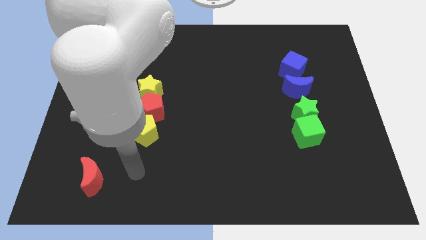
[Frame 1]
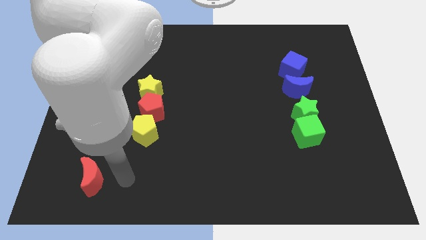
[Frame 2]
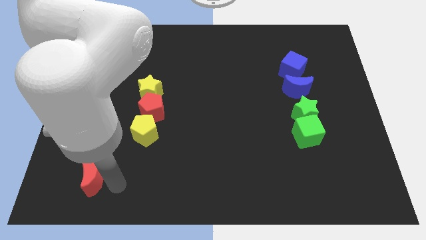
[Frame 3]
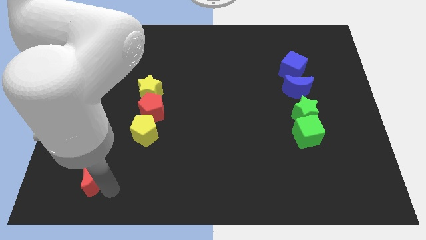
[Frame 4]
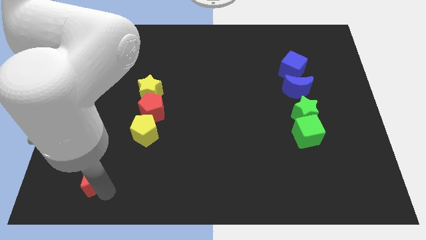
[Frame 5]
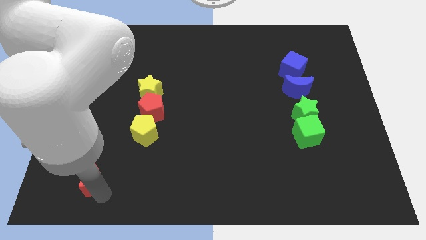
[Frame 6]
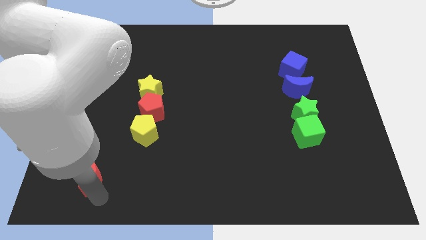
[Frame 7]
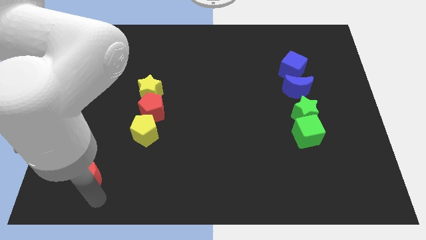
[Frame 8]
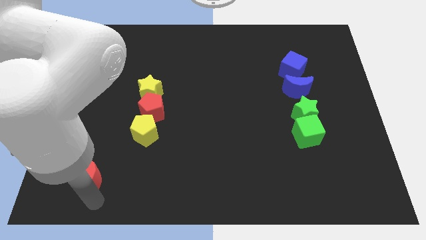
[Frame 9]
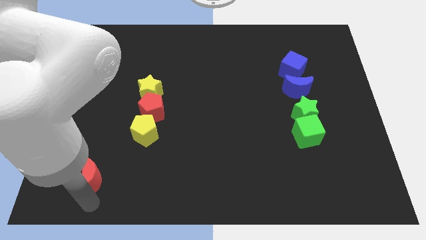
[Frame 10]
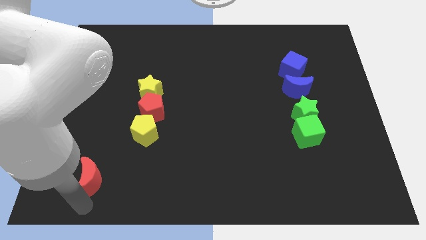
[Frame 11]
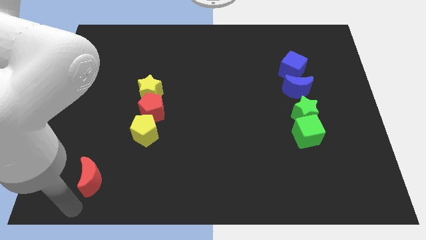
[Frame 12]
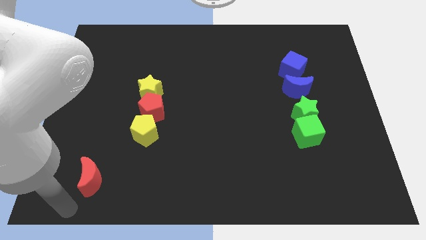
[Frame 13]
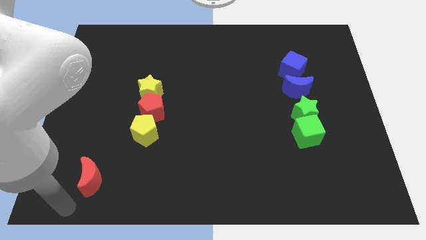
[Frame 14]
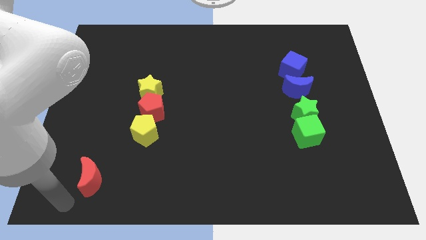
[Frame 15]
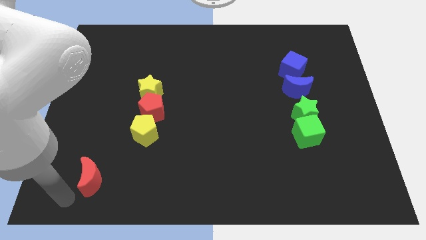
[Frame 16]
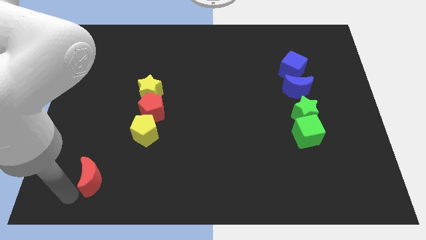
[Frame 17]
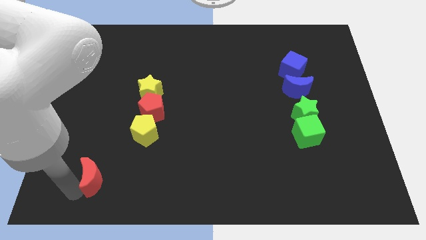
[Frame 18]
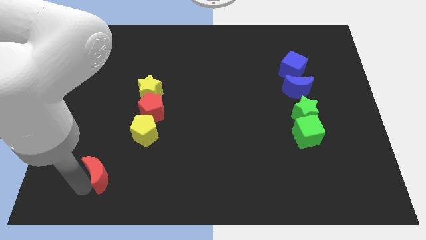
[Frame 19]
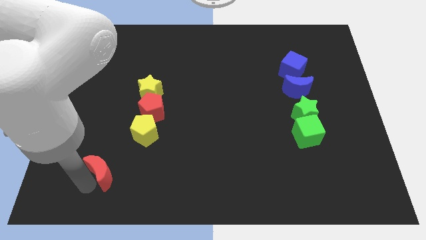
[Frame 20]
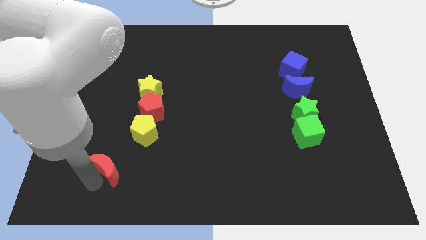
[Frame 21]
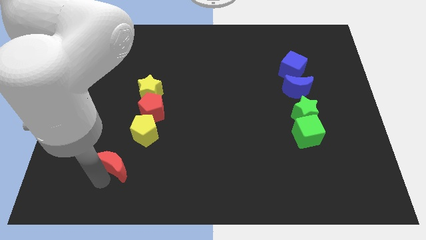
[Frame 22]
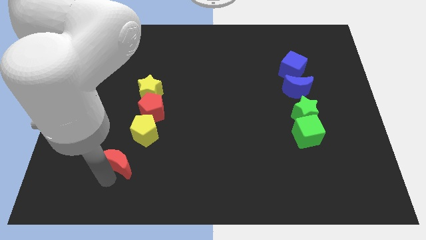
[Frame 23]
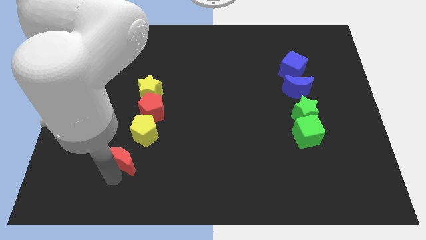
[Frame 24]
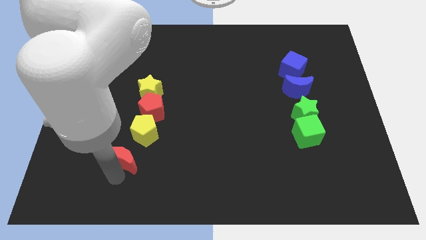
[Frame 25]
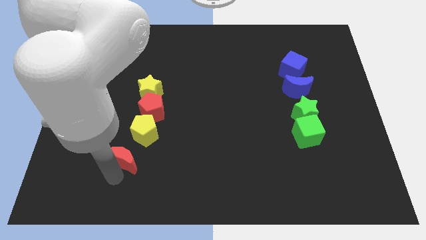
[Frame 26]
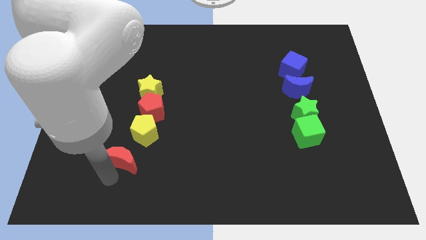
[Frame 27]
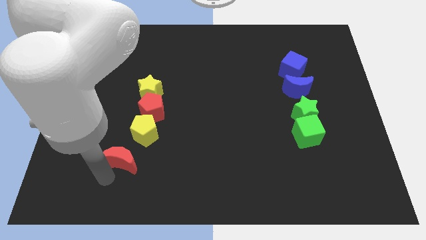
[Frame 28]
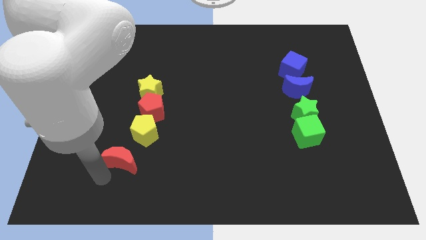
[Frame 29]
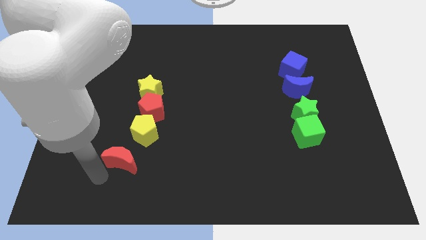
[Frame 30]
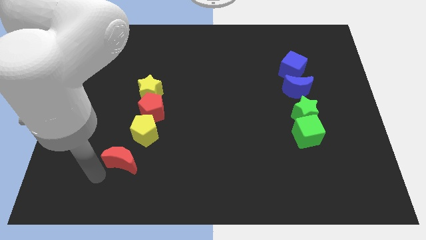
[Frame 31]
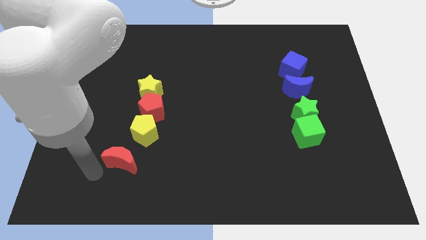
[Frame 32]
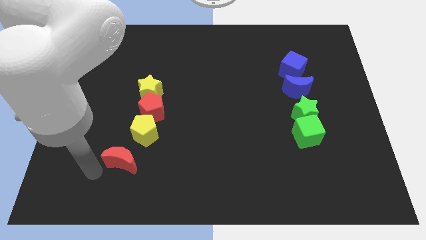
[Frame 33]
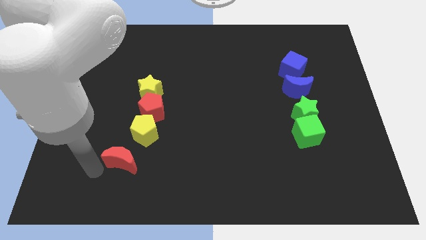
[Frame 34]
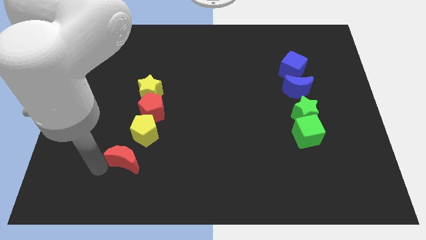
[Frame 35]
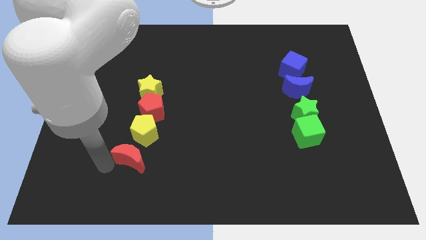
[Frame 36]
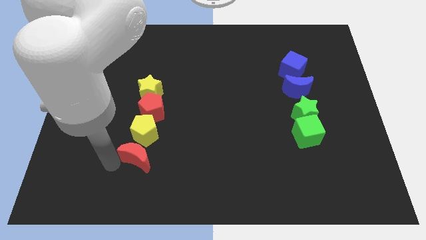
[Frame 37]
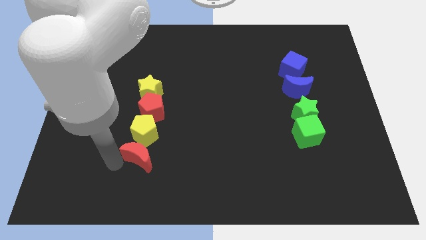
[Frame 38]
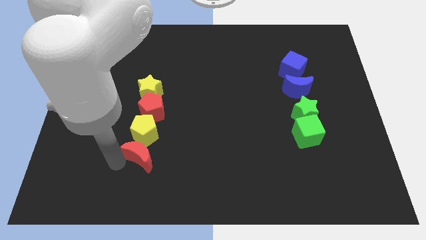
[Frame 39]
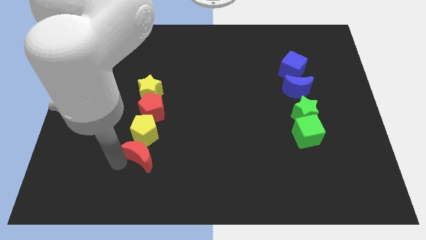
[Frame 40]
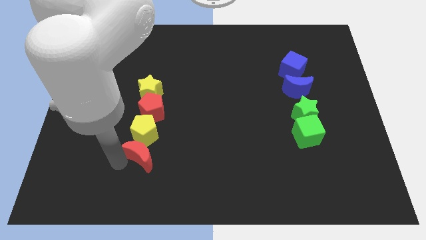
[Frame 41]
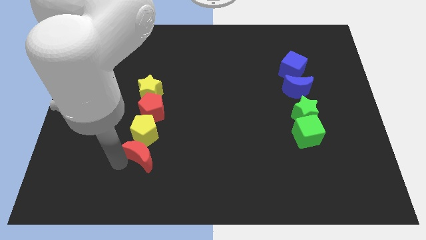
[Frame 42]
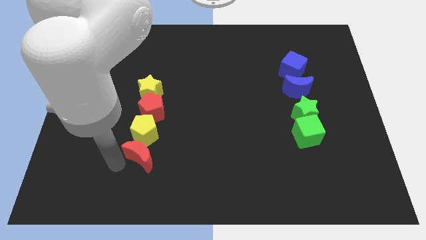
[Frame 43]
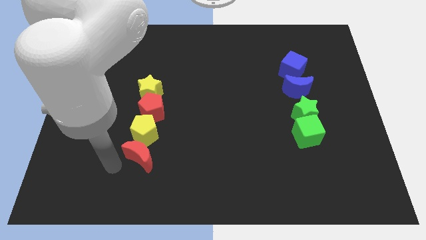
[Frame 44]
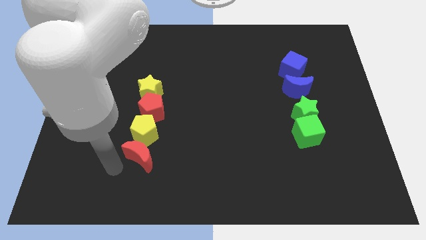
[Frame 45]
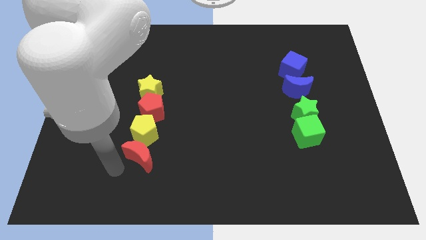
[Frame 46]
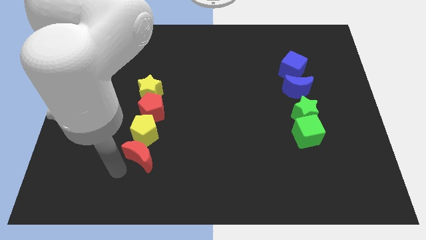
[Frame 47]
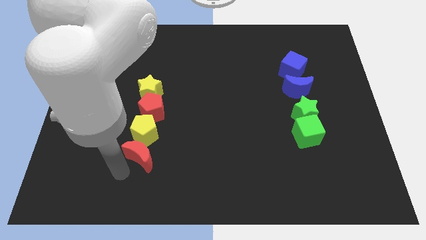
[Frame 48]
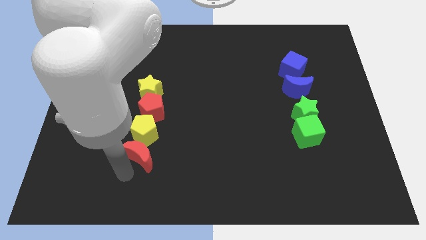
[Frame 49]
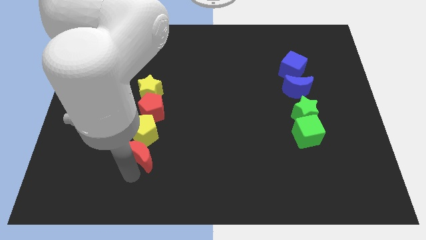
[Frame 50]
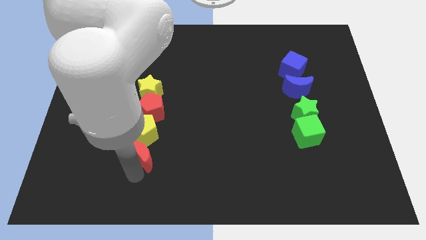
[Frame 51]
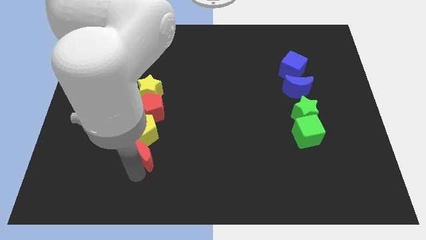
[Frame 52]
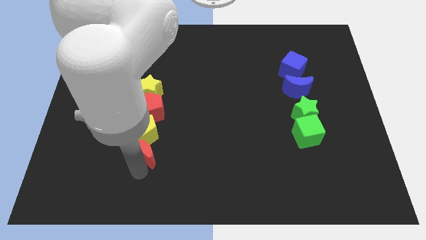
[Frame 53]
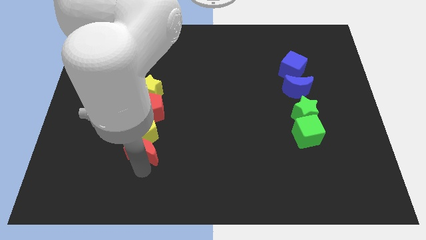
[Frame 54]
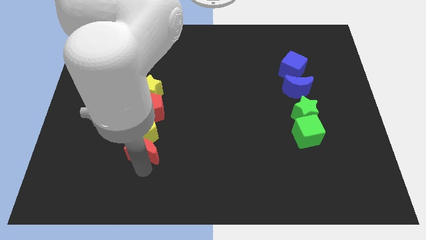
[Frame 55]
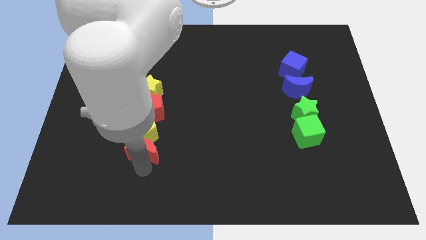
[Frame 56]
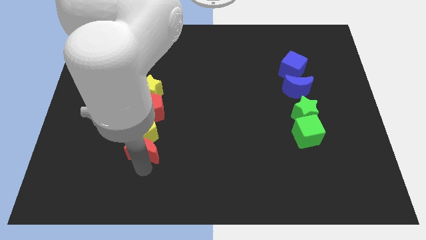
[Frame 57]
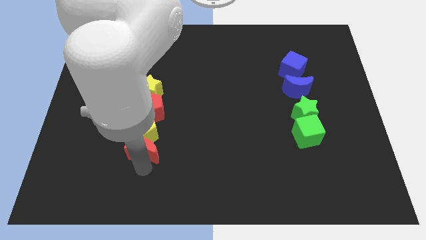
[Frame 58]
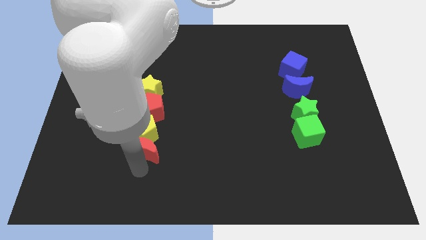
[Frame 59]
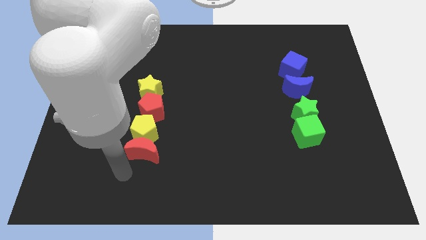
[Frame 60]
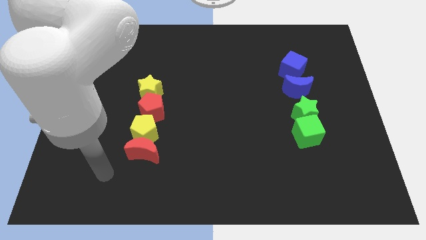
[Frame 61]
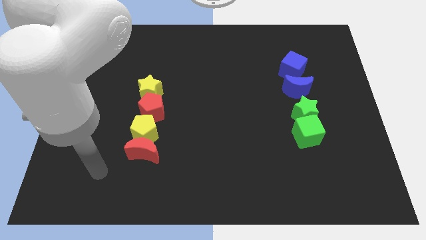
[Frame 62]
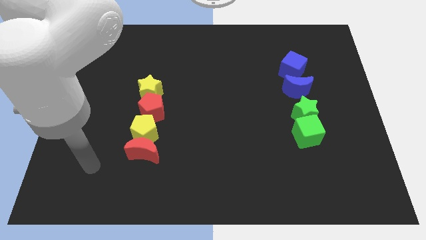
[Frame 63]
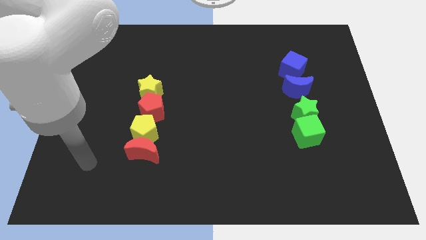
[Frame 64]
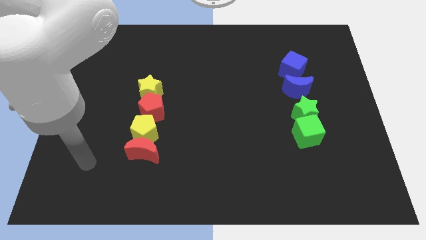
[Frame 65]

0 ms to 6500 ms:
push the red moon to the bottom side of the yellow pentagon

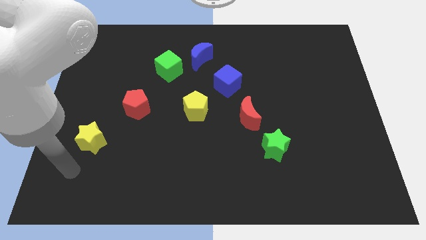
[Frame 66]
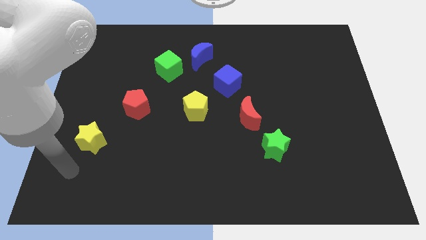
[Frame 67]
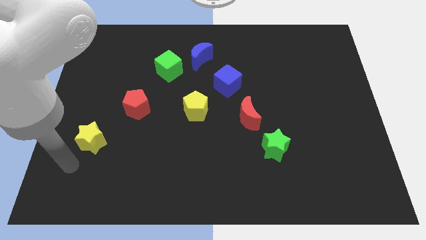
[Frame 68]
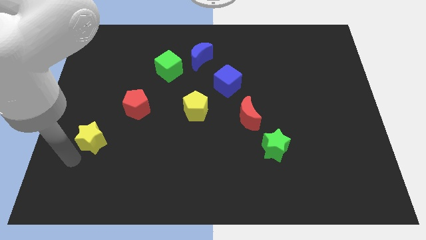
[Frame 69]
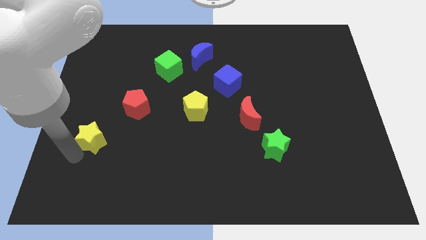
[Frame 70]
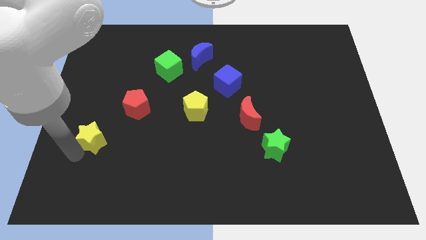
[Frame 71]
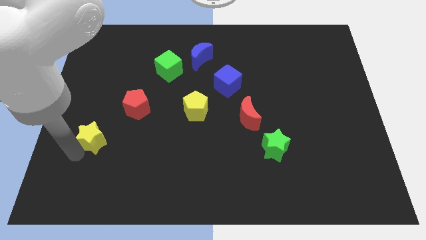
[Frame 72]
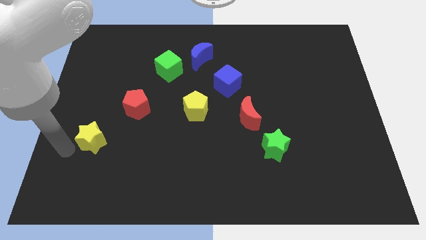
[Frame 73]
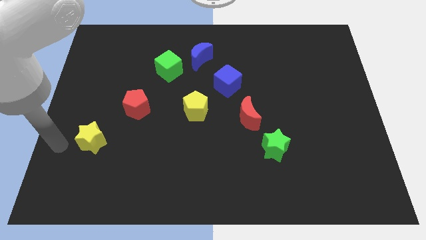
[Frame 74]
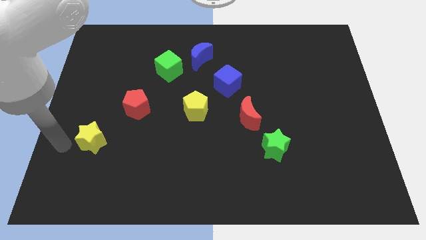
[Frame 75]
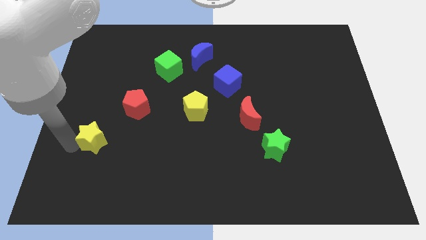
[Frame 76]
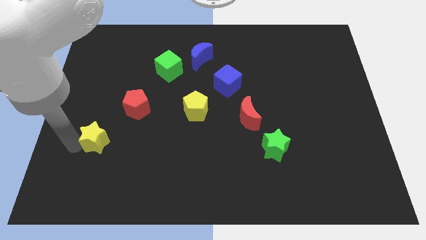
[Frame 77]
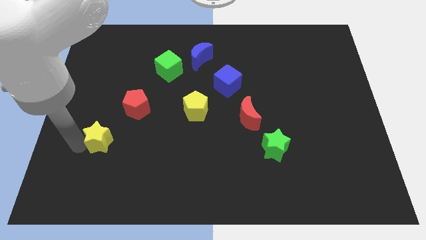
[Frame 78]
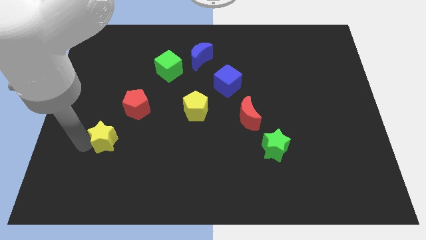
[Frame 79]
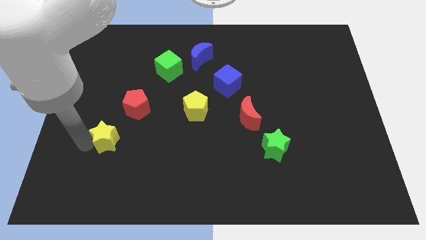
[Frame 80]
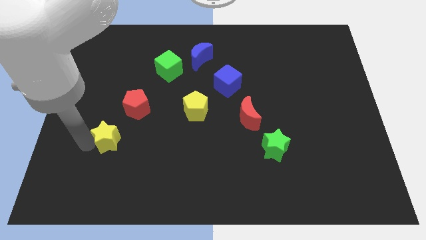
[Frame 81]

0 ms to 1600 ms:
slide the yellow star slightly to the right

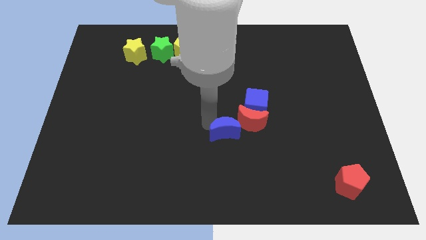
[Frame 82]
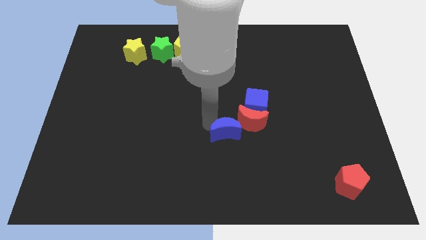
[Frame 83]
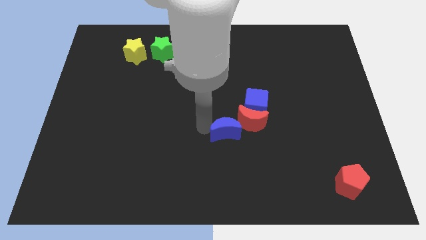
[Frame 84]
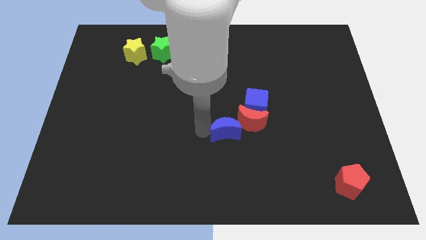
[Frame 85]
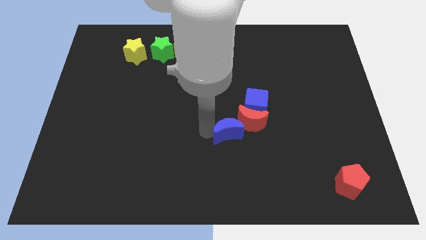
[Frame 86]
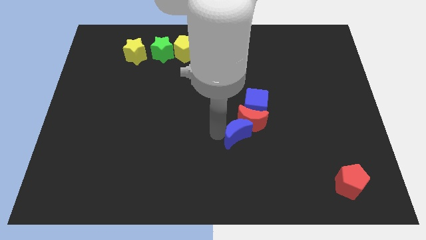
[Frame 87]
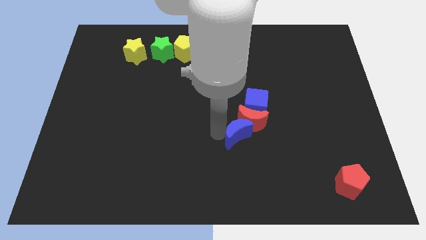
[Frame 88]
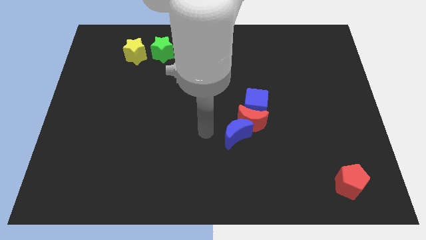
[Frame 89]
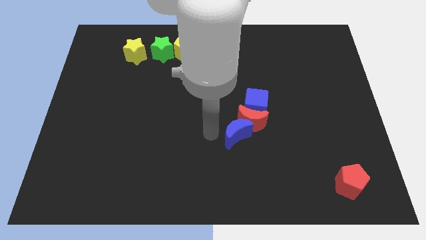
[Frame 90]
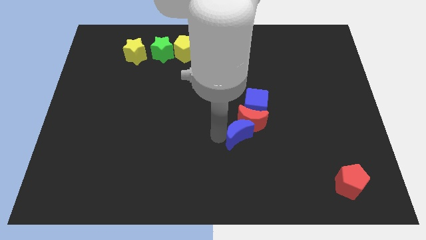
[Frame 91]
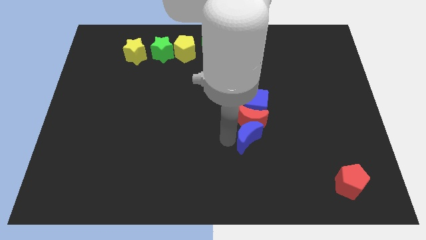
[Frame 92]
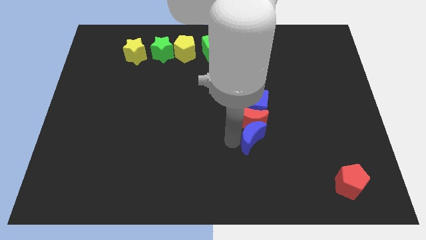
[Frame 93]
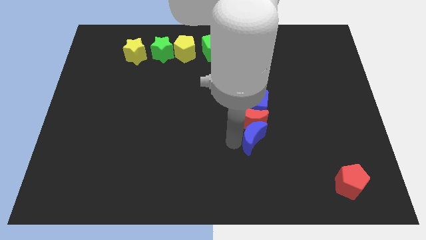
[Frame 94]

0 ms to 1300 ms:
move the blue crescent at the bottom of the red crescent
